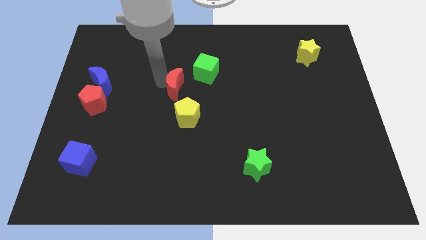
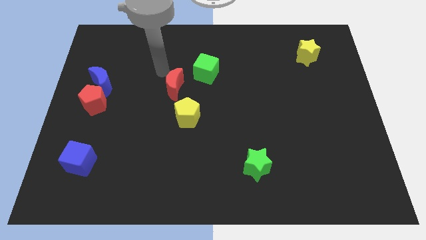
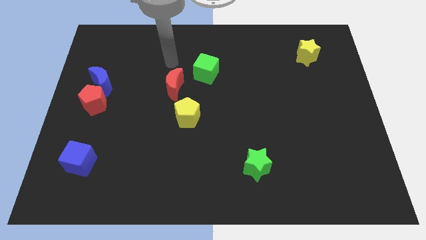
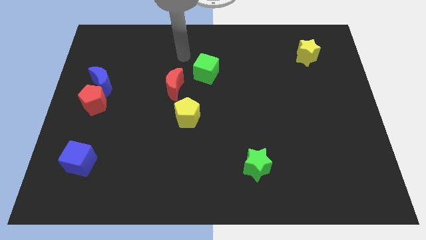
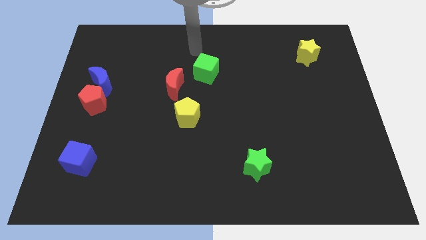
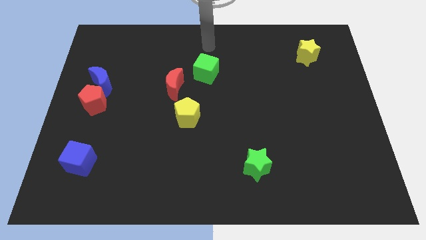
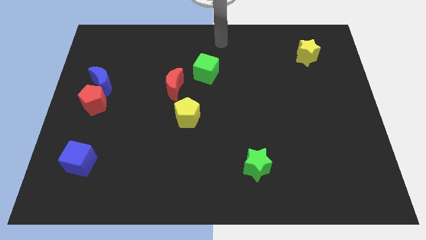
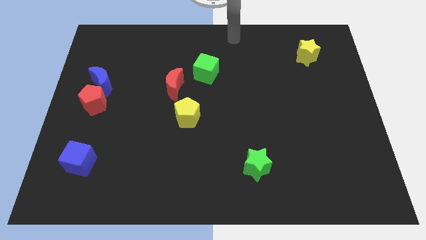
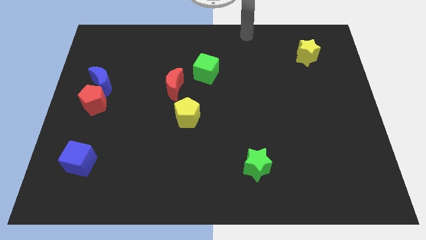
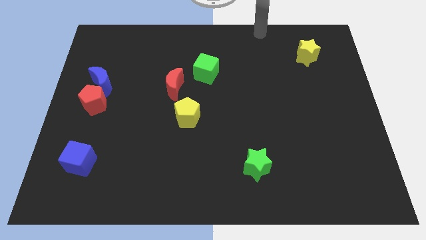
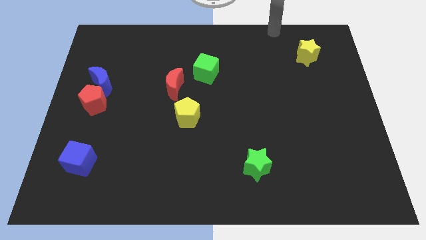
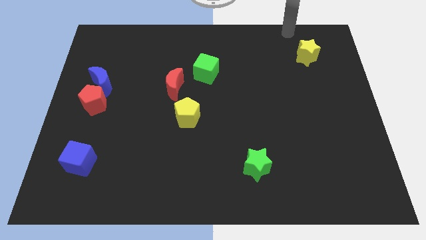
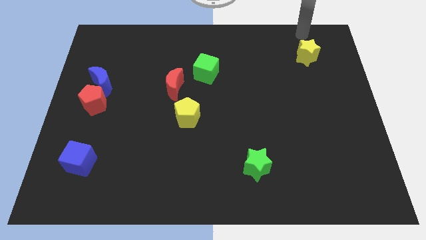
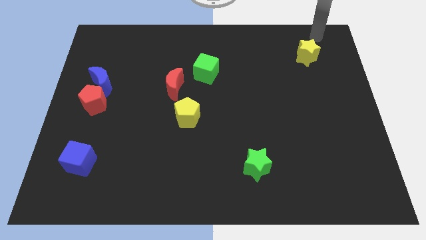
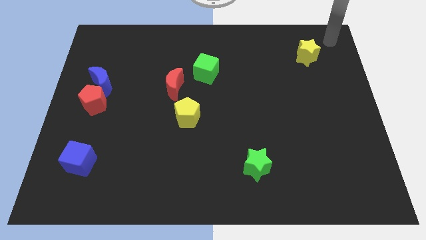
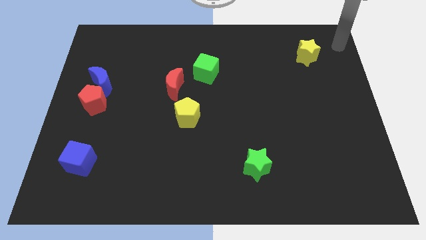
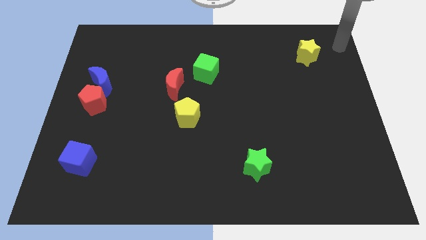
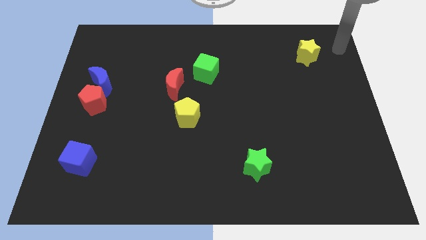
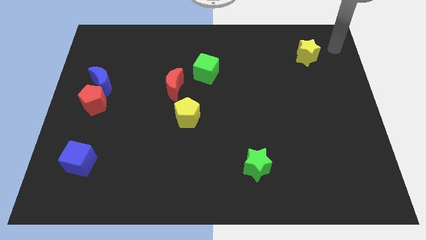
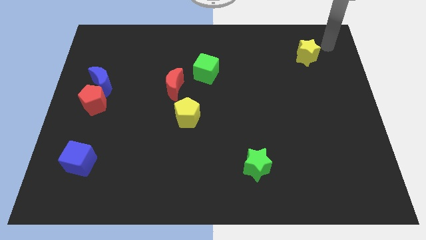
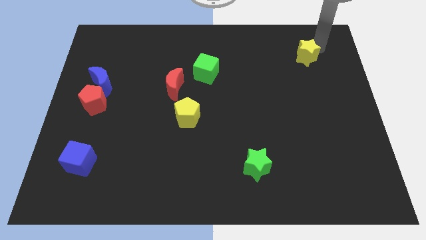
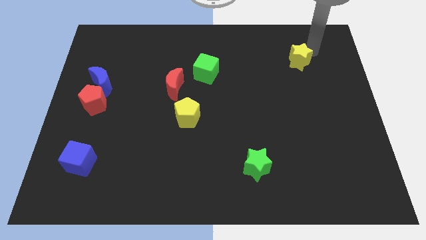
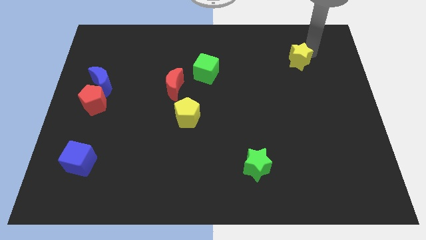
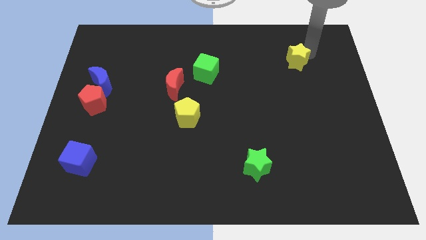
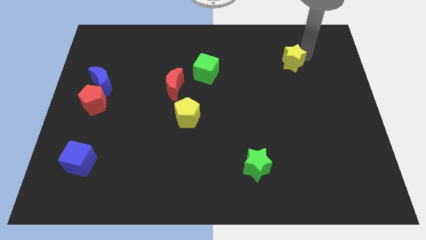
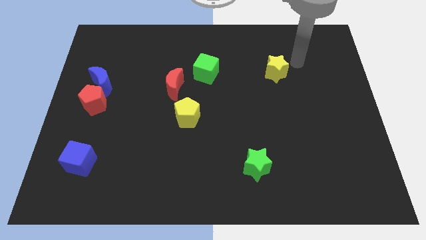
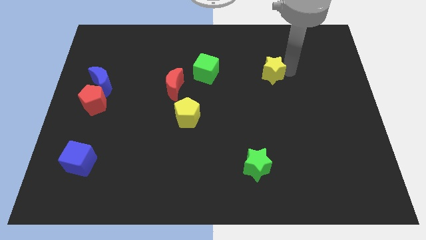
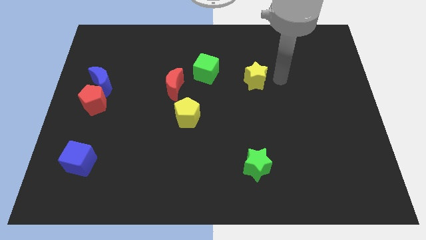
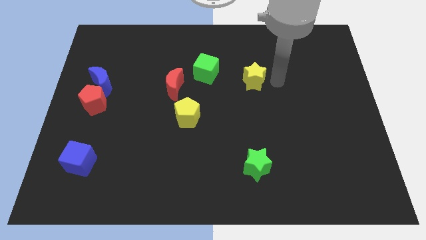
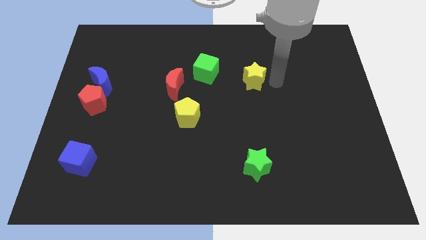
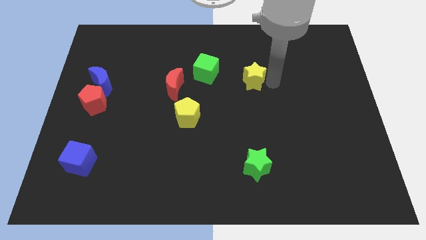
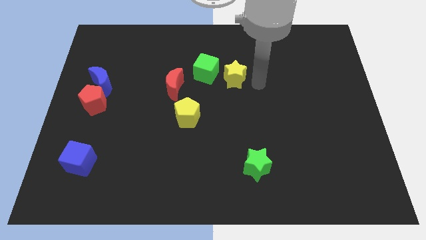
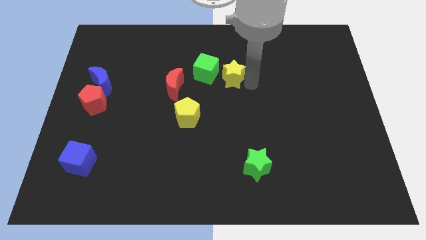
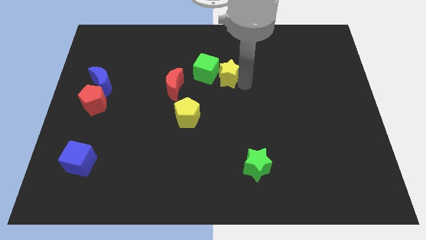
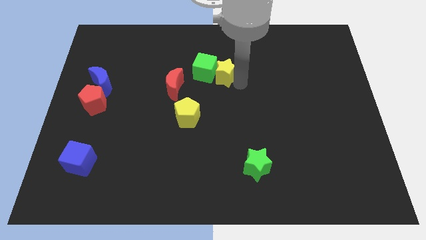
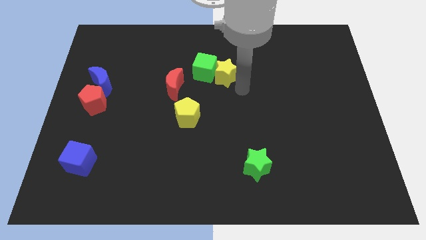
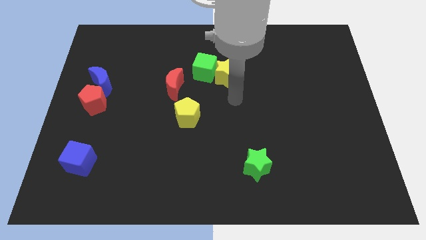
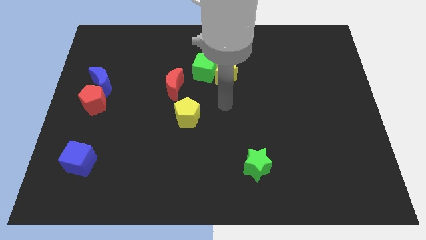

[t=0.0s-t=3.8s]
push the yellow star into the right side of the green cube

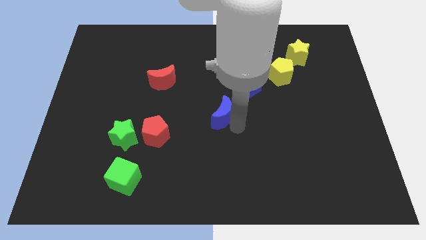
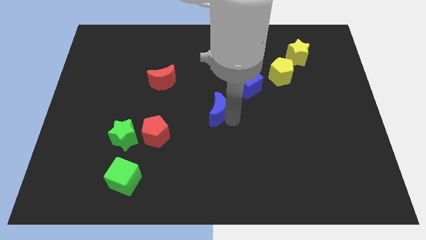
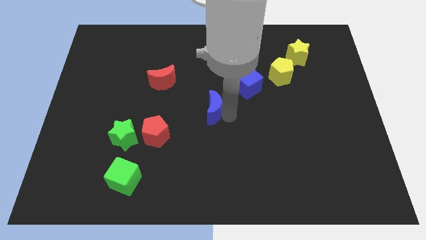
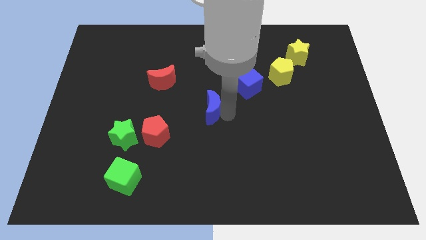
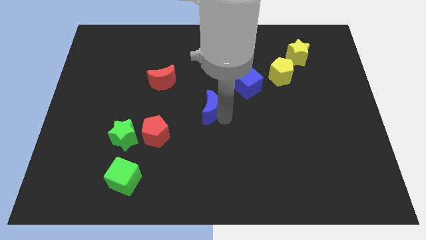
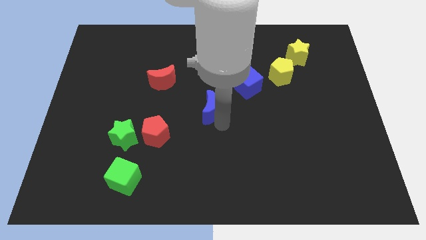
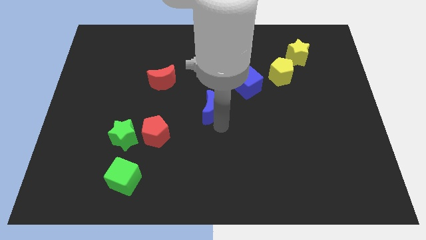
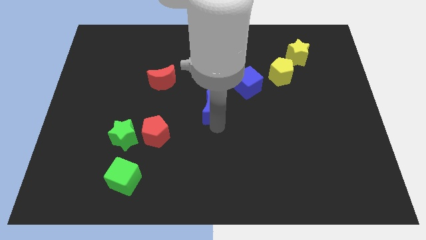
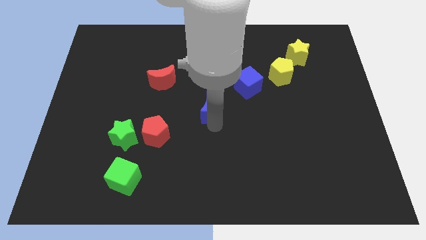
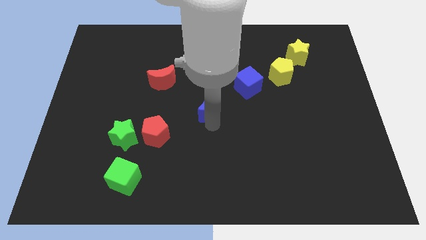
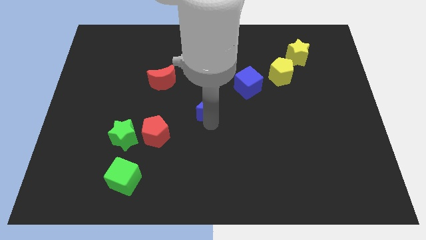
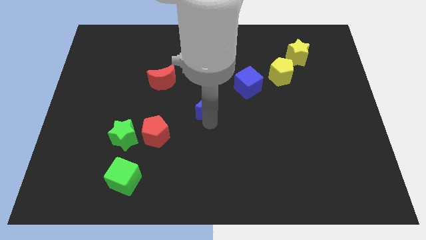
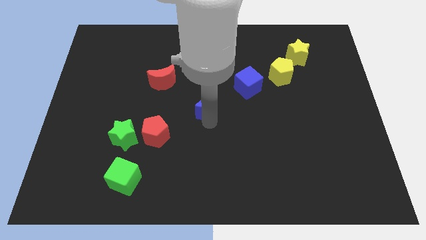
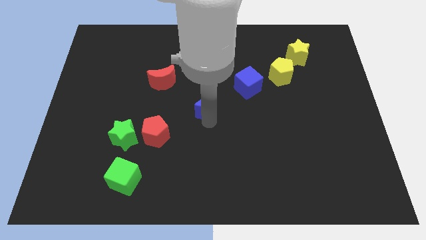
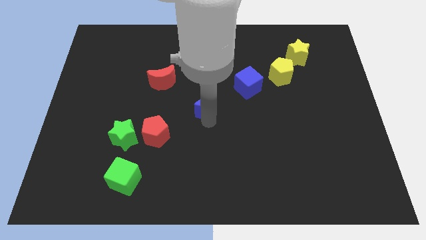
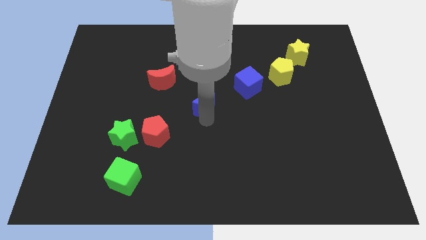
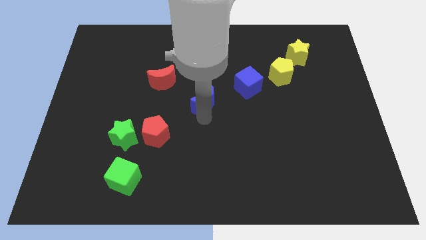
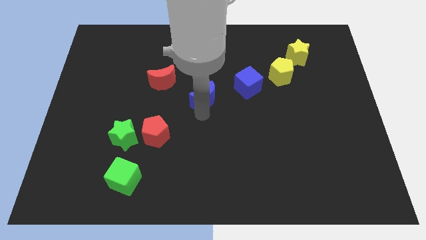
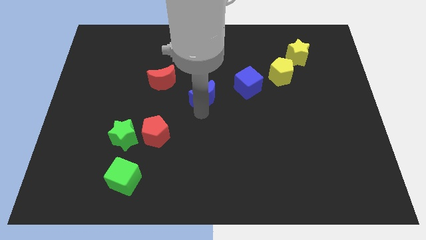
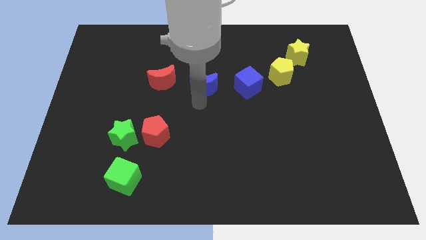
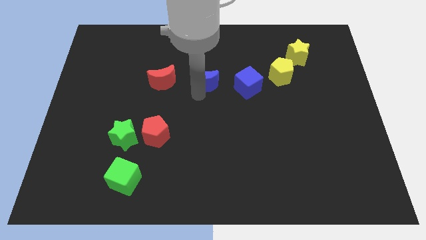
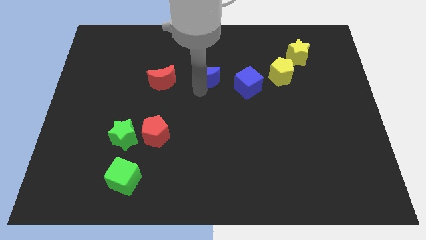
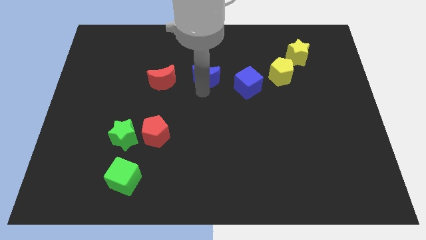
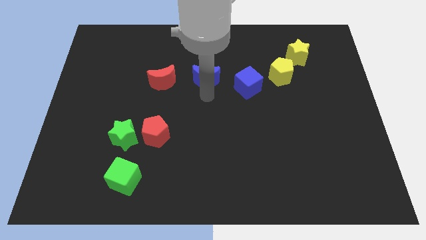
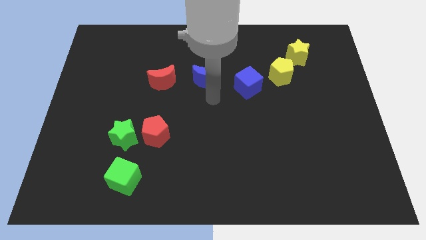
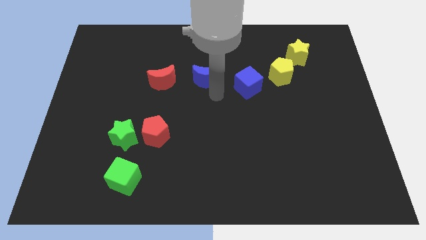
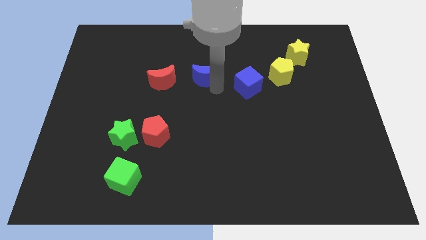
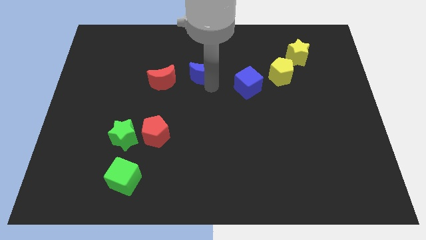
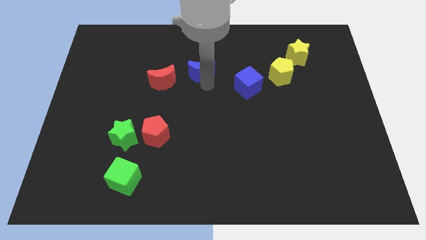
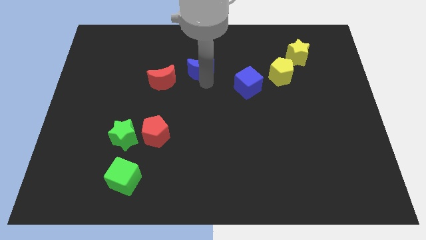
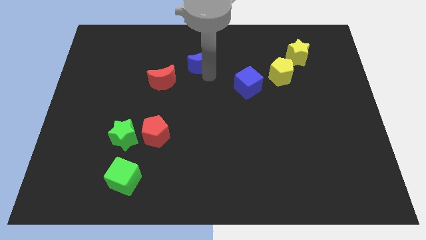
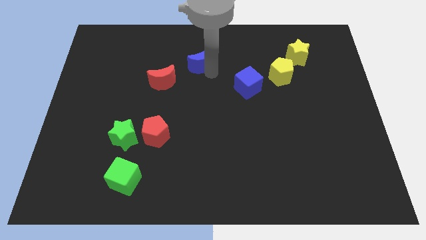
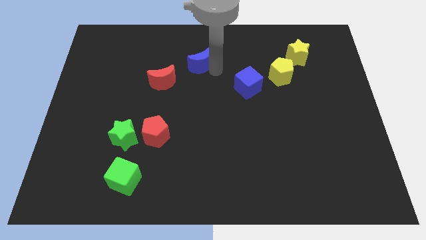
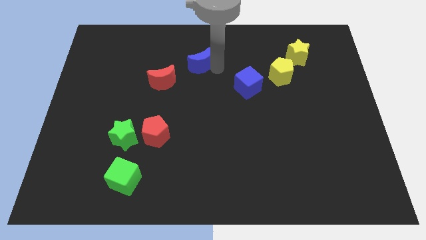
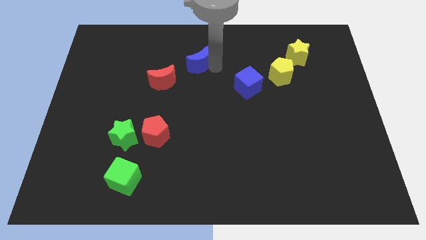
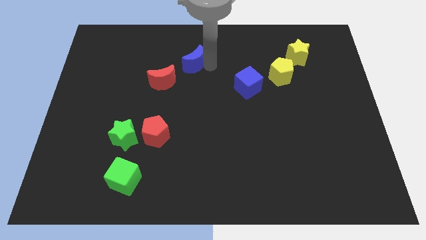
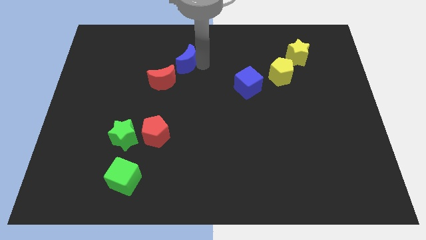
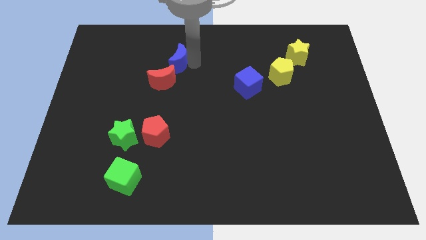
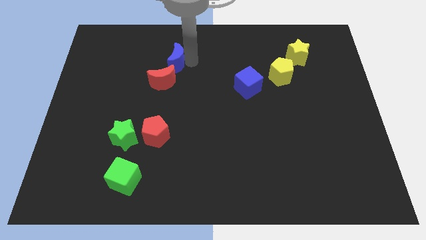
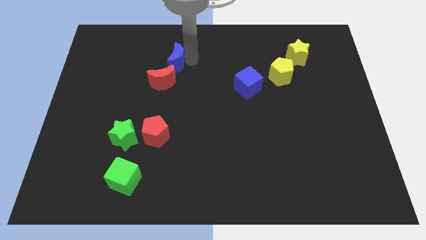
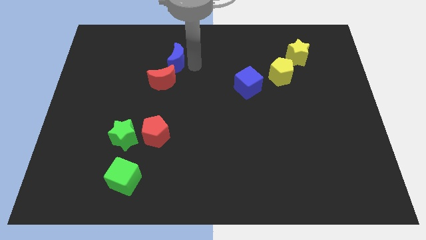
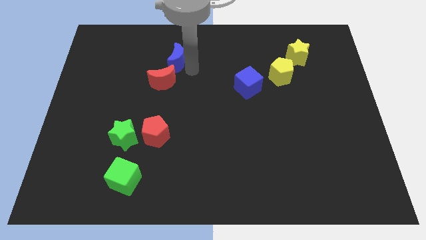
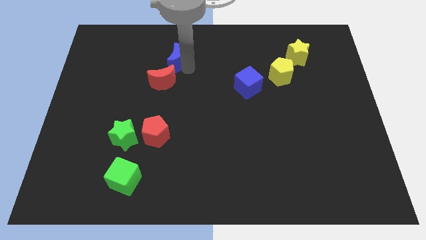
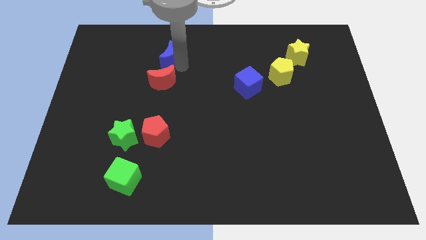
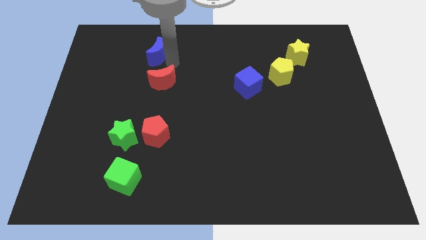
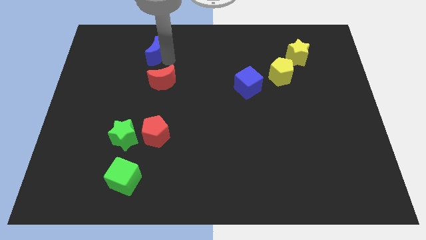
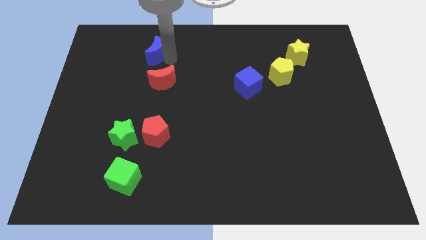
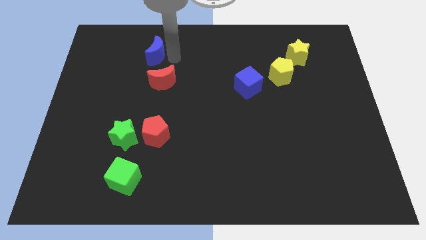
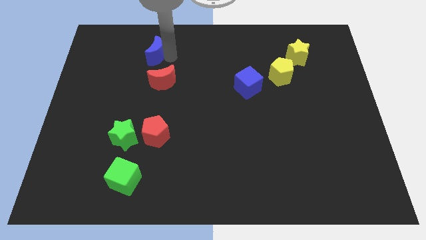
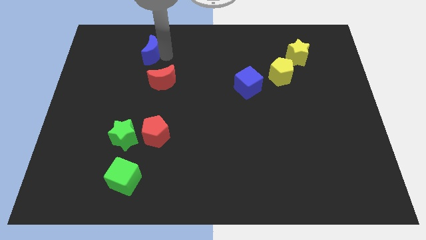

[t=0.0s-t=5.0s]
place the blue moon above the red moon

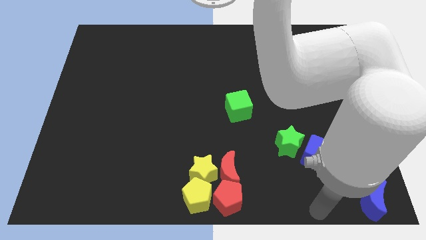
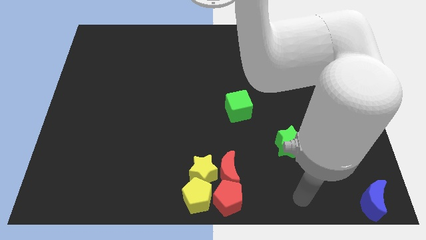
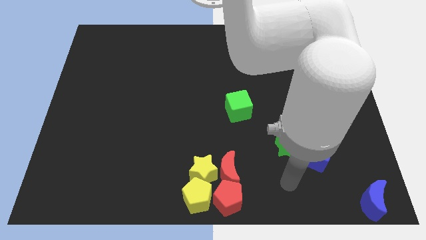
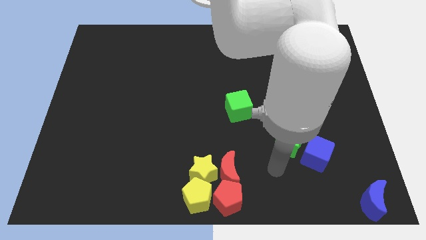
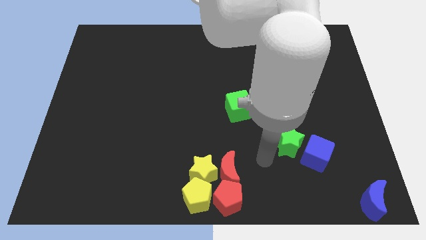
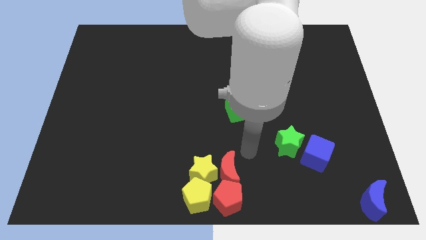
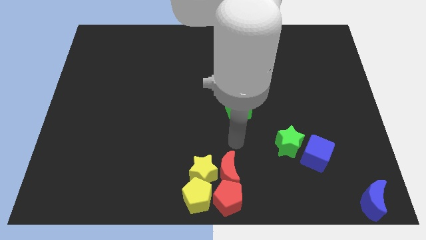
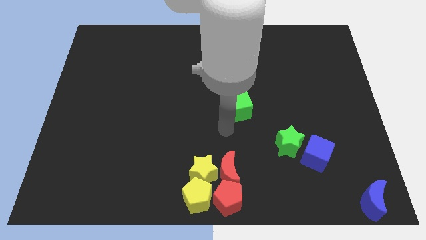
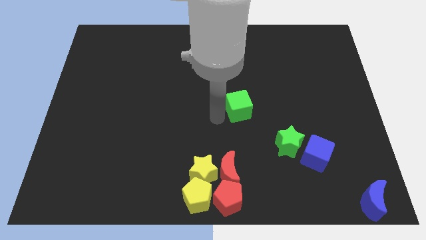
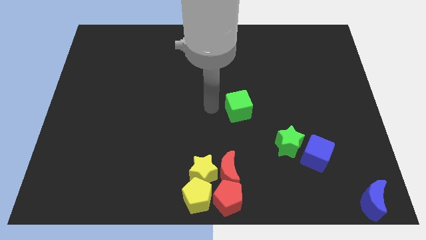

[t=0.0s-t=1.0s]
move the arm diagonally up
